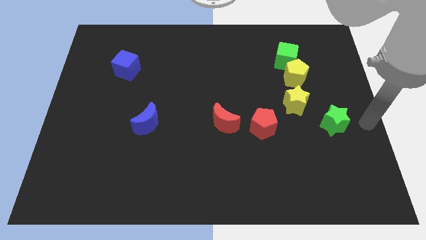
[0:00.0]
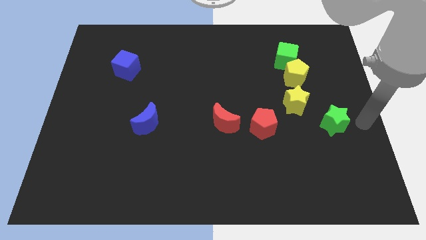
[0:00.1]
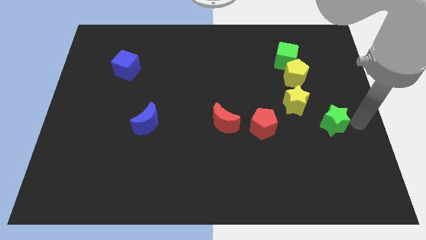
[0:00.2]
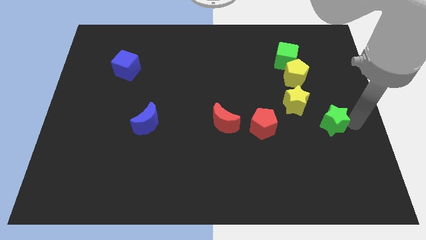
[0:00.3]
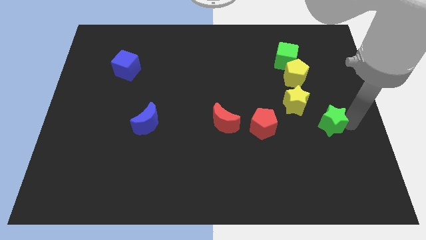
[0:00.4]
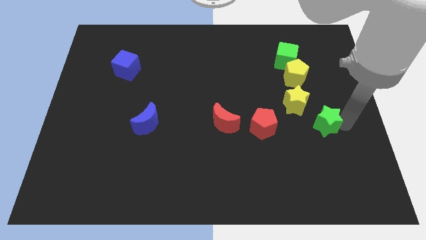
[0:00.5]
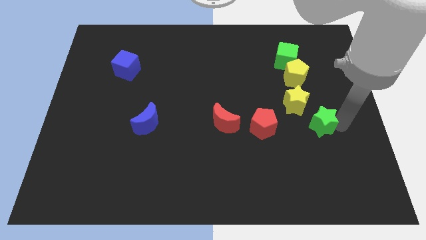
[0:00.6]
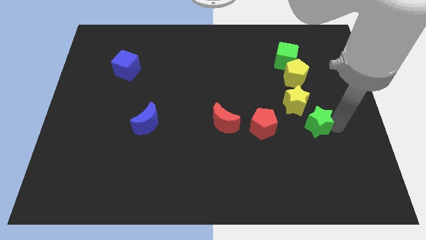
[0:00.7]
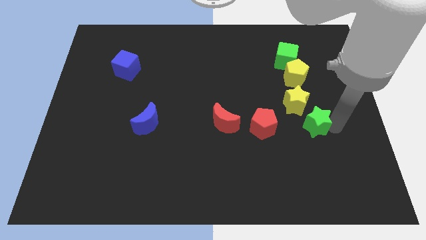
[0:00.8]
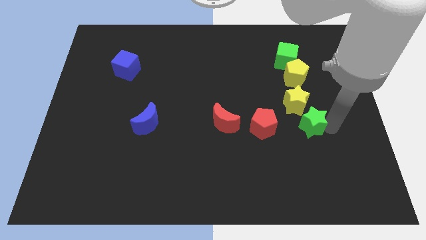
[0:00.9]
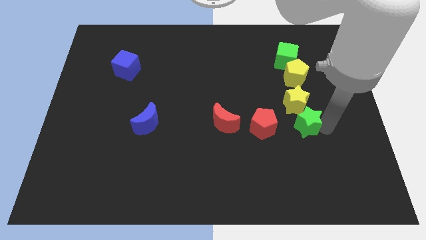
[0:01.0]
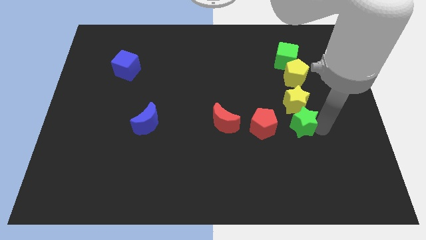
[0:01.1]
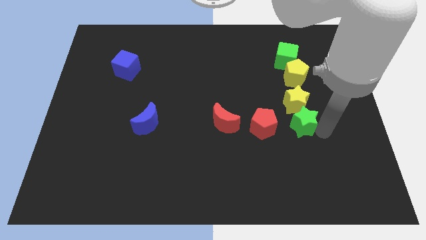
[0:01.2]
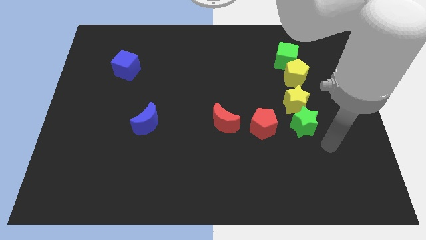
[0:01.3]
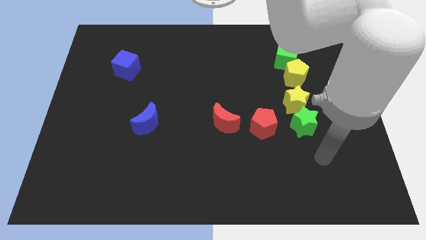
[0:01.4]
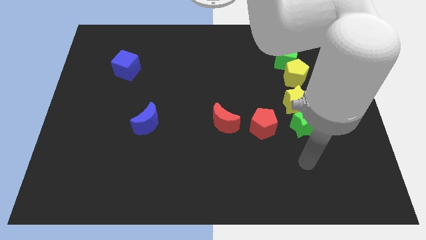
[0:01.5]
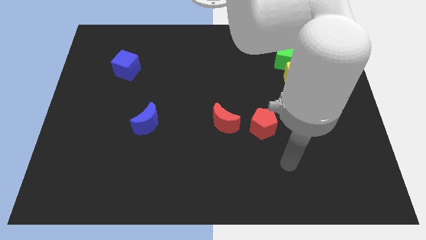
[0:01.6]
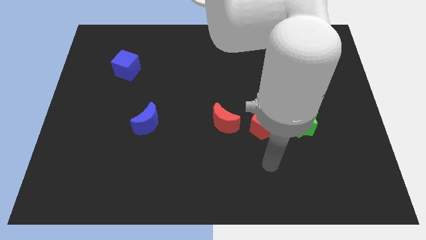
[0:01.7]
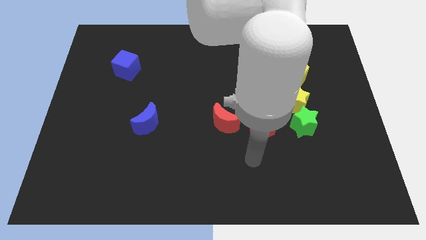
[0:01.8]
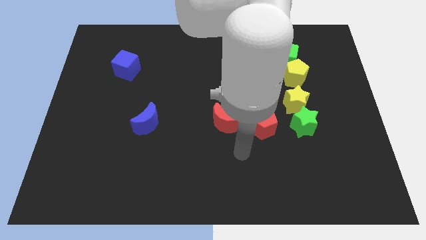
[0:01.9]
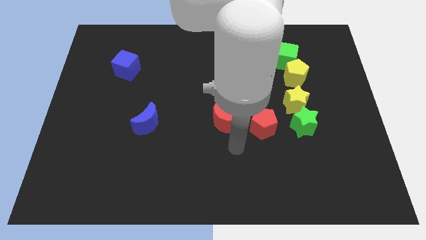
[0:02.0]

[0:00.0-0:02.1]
place the green star below the yellow star

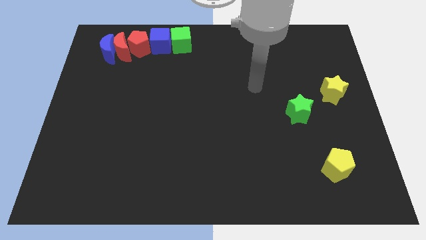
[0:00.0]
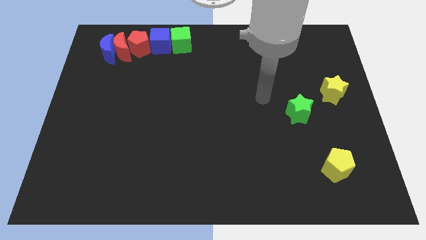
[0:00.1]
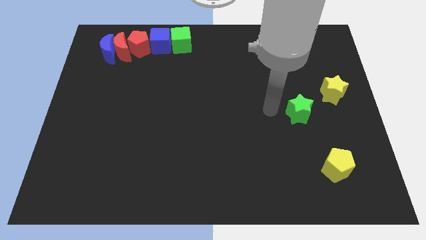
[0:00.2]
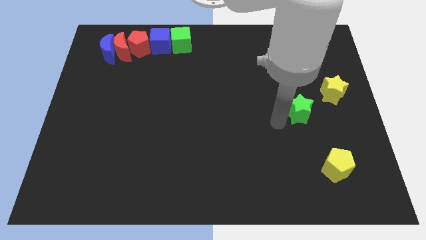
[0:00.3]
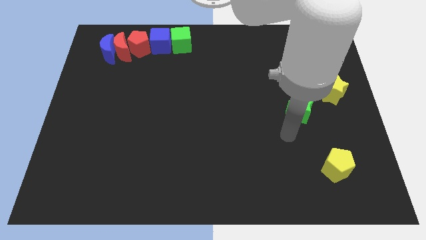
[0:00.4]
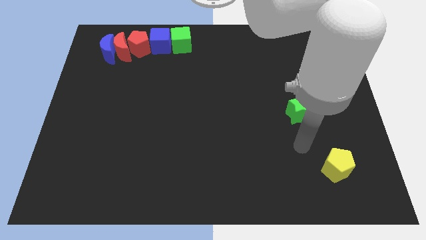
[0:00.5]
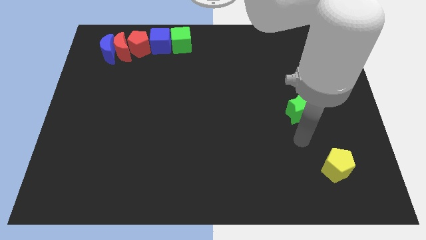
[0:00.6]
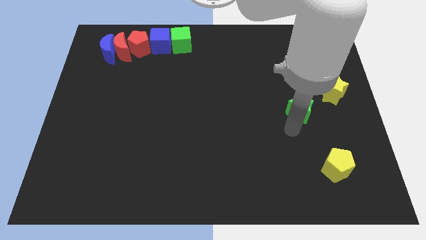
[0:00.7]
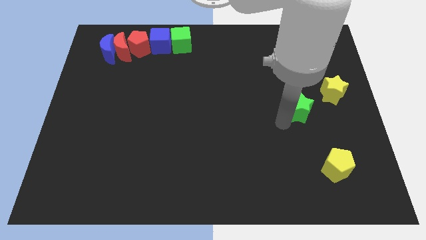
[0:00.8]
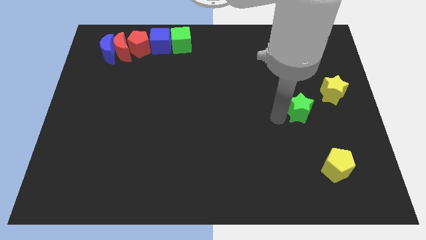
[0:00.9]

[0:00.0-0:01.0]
place arm at the bottom of green star

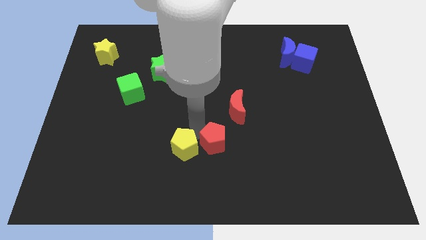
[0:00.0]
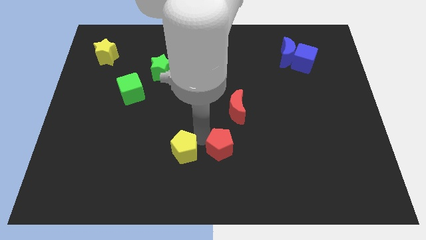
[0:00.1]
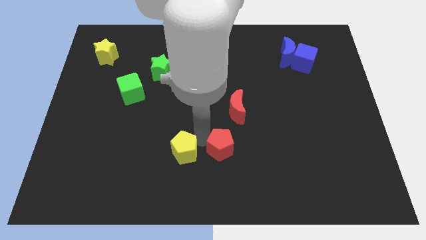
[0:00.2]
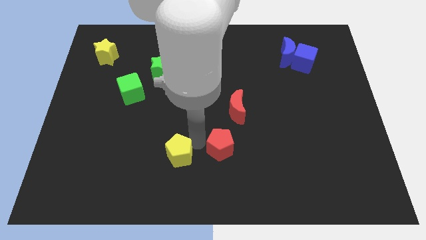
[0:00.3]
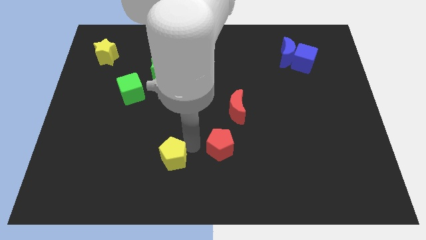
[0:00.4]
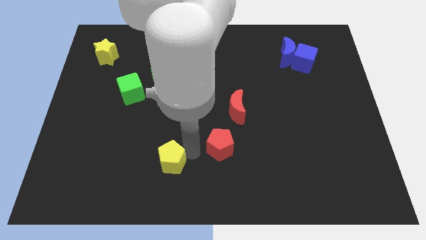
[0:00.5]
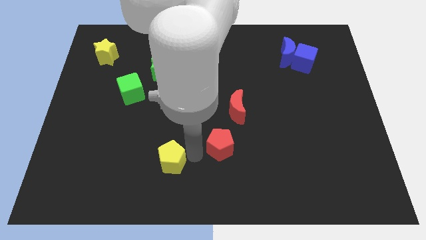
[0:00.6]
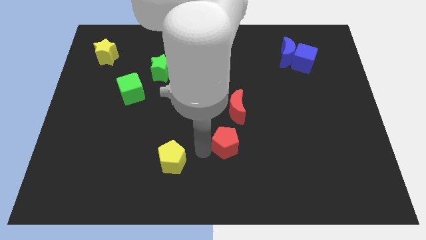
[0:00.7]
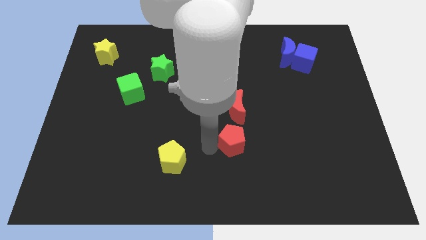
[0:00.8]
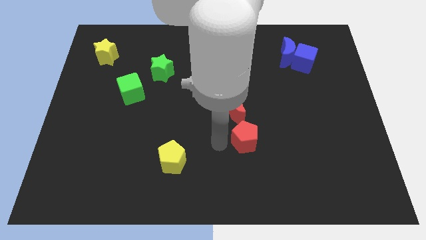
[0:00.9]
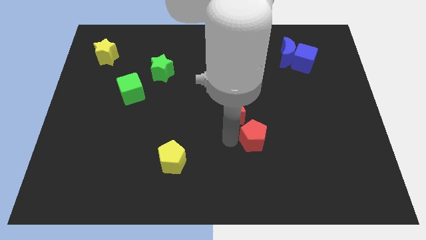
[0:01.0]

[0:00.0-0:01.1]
move the red pentagon below the red crescent

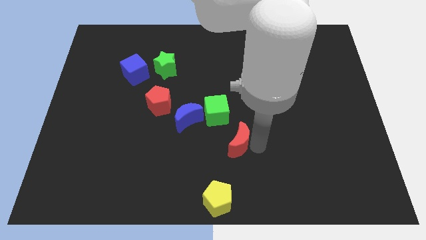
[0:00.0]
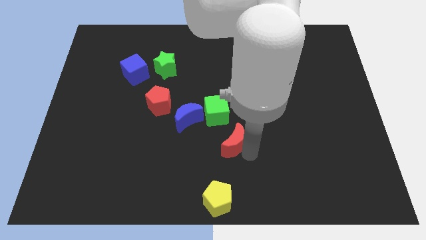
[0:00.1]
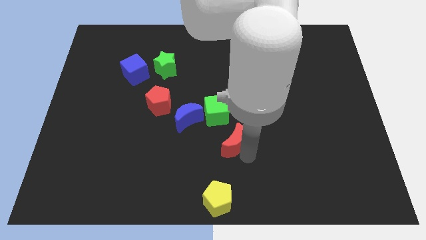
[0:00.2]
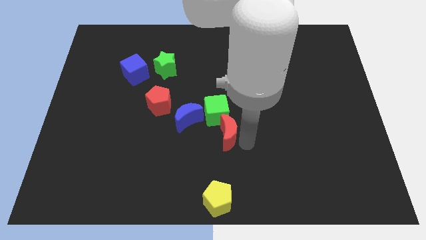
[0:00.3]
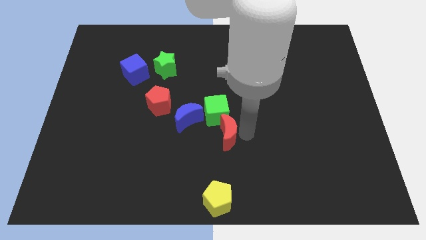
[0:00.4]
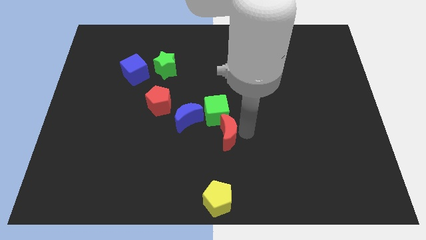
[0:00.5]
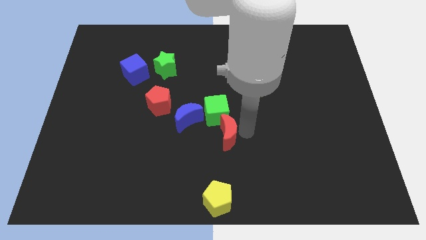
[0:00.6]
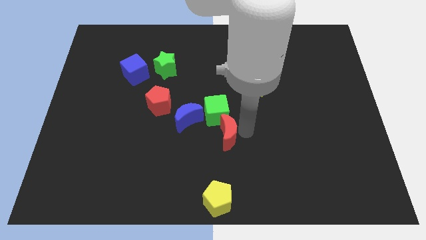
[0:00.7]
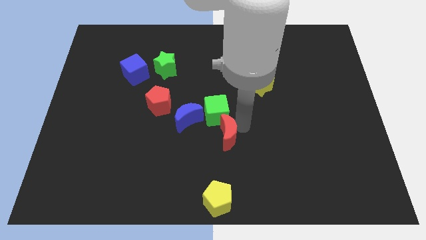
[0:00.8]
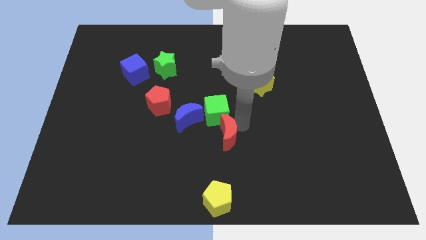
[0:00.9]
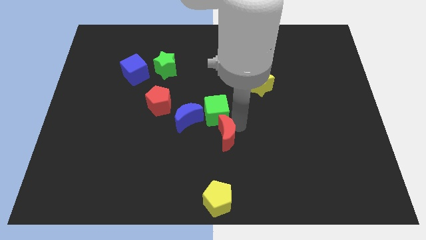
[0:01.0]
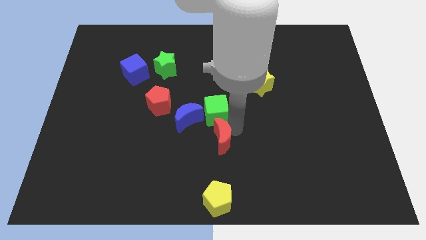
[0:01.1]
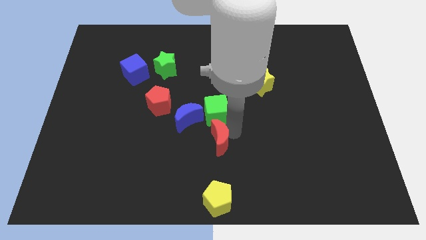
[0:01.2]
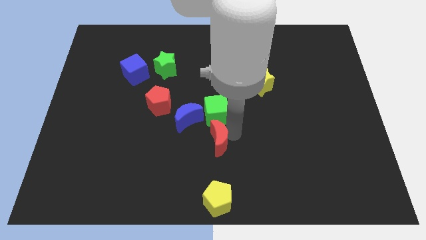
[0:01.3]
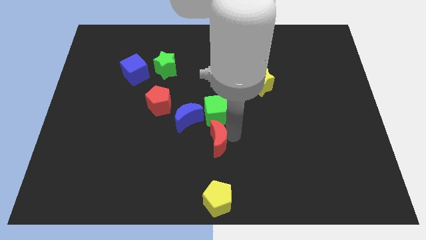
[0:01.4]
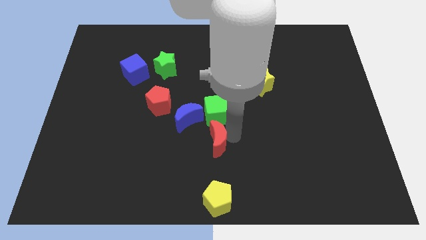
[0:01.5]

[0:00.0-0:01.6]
put the red crescent below the green cube

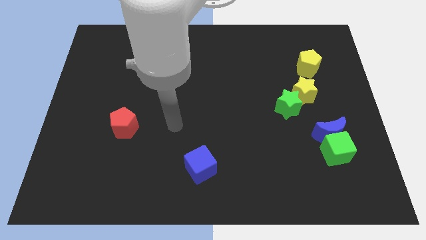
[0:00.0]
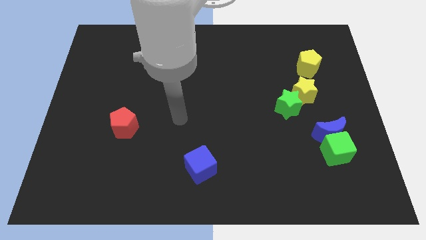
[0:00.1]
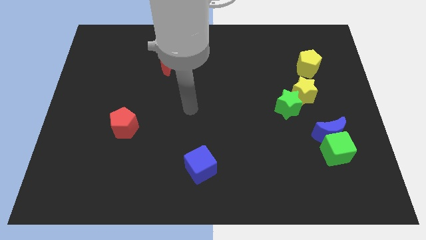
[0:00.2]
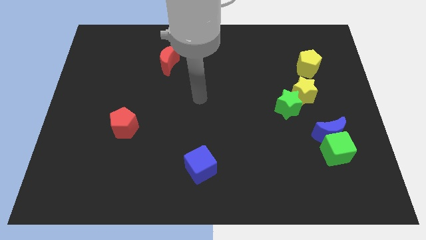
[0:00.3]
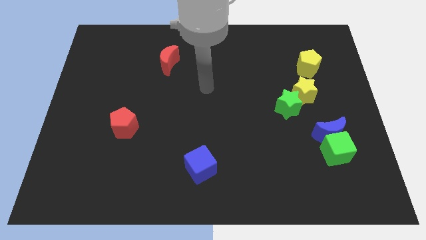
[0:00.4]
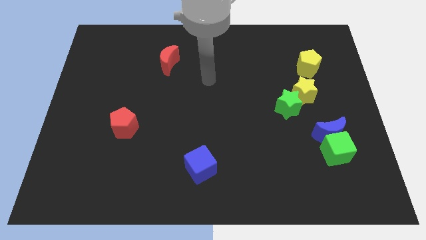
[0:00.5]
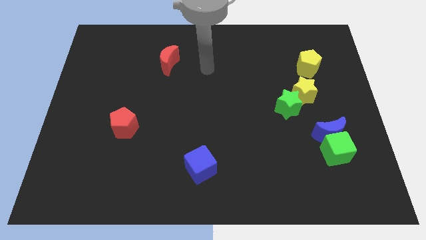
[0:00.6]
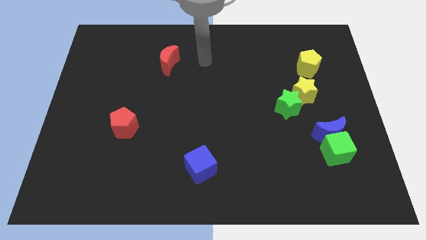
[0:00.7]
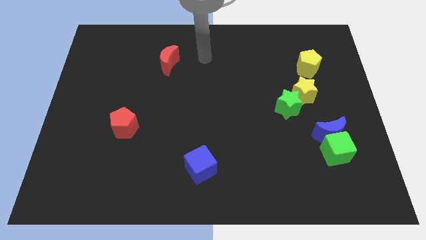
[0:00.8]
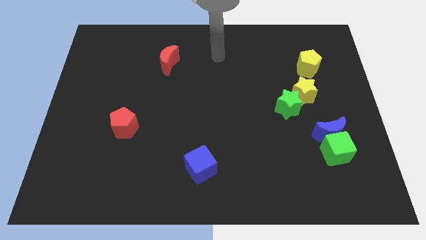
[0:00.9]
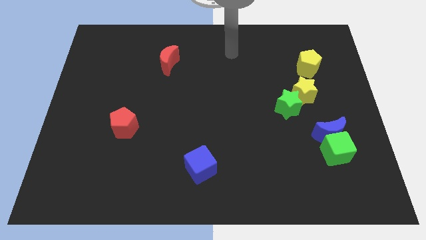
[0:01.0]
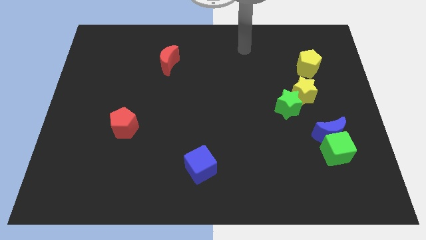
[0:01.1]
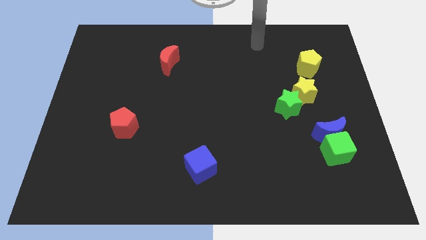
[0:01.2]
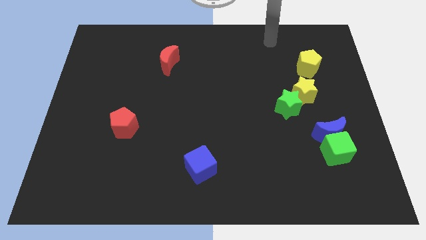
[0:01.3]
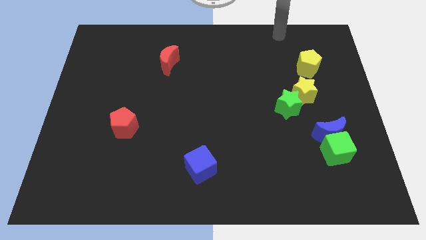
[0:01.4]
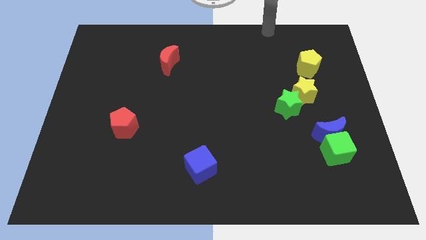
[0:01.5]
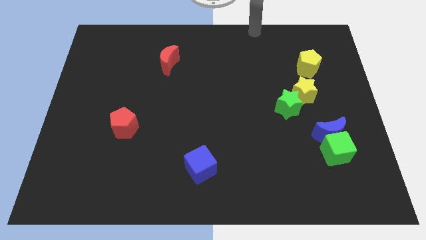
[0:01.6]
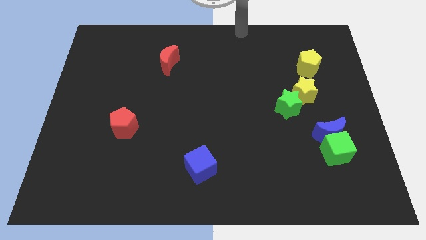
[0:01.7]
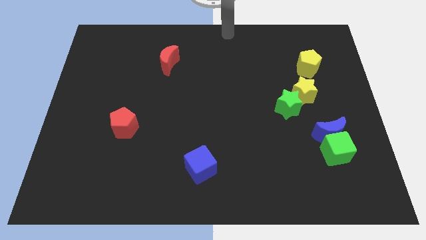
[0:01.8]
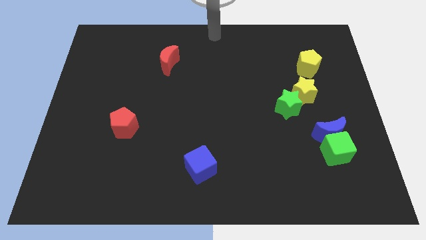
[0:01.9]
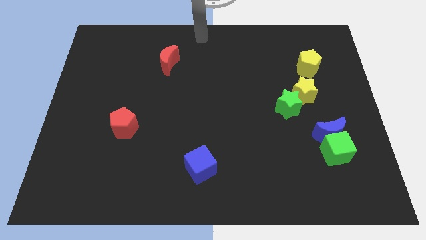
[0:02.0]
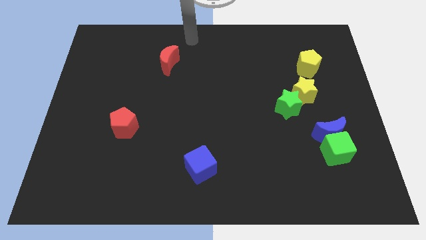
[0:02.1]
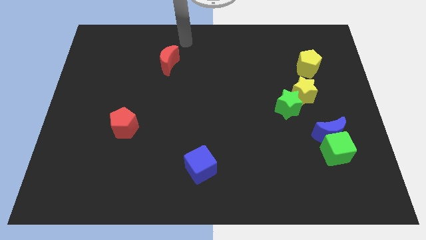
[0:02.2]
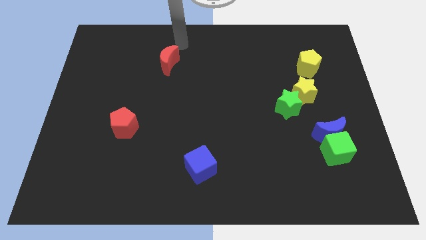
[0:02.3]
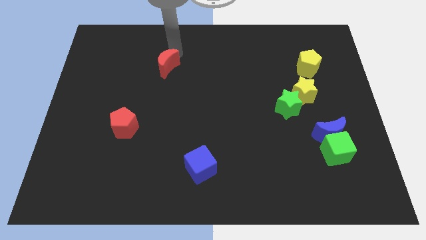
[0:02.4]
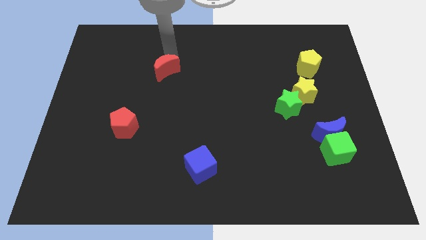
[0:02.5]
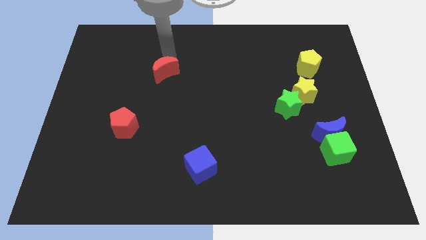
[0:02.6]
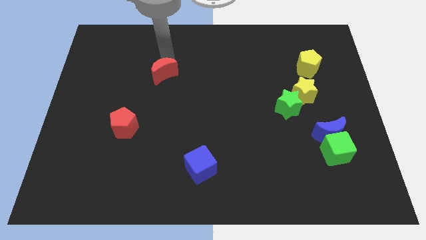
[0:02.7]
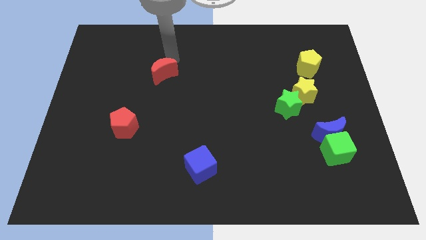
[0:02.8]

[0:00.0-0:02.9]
move your arm to the top side of the red moon

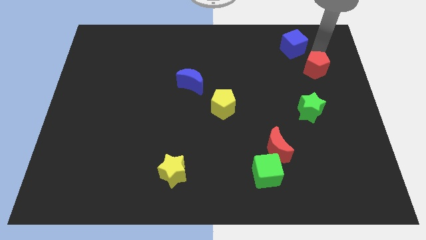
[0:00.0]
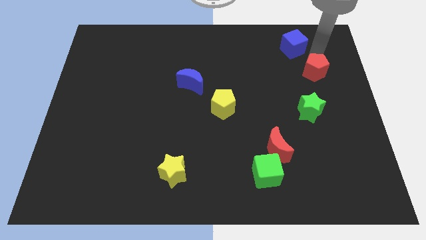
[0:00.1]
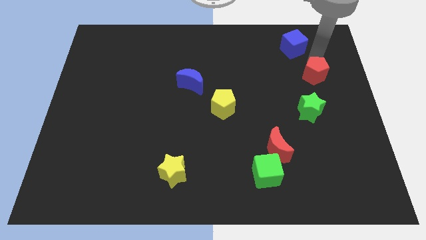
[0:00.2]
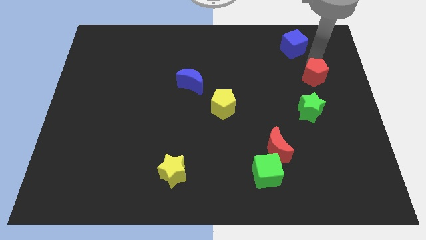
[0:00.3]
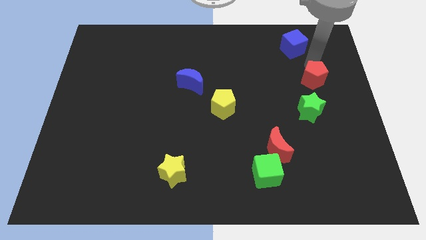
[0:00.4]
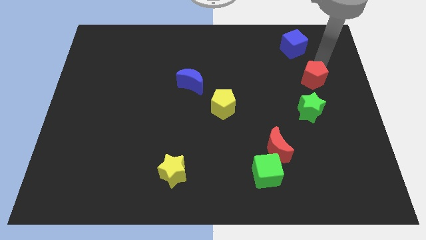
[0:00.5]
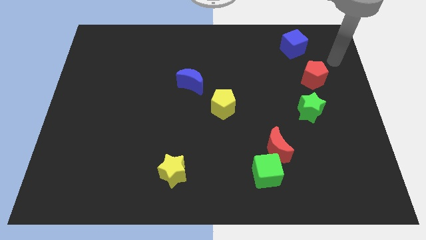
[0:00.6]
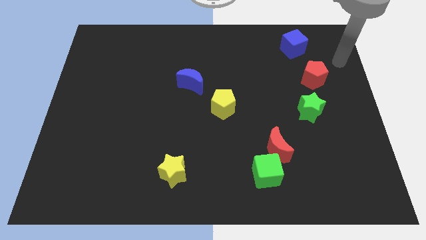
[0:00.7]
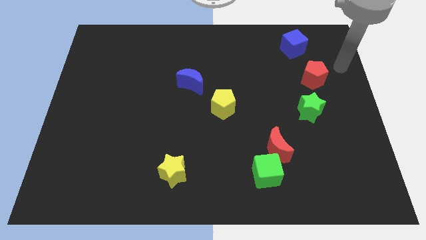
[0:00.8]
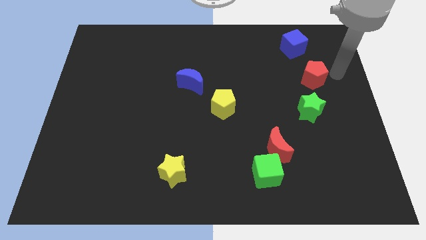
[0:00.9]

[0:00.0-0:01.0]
move the red pentagon towards the green star
